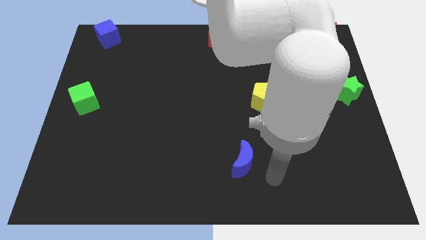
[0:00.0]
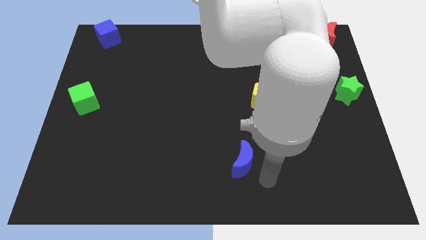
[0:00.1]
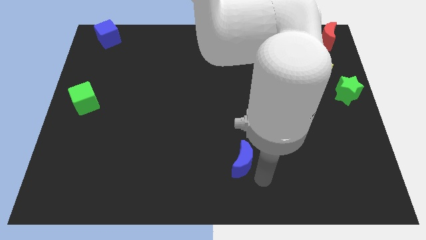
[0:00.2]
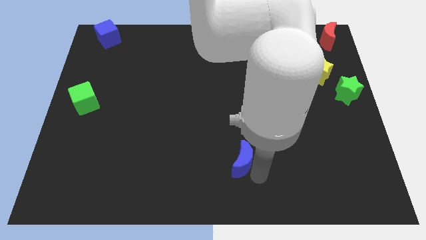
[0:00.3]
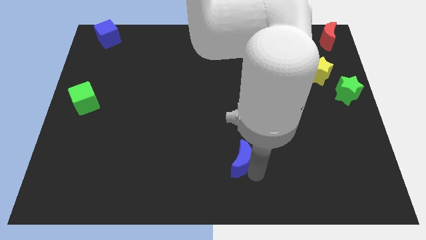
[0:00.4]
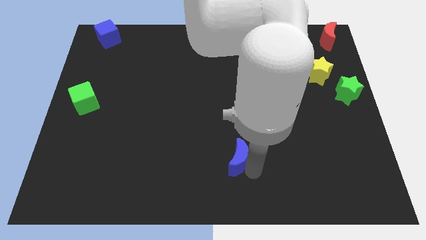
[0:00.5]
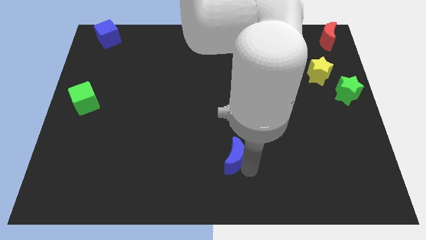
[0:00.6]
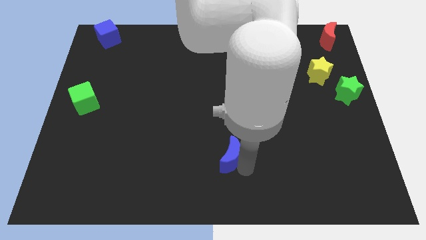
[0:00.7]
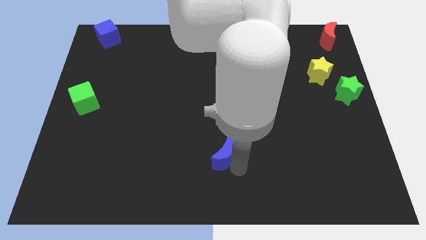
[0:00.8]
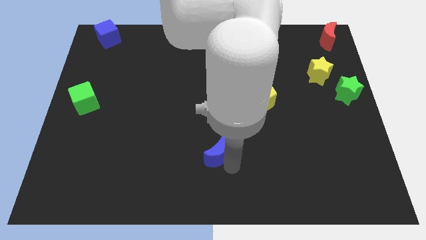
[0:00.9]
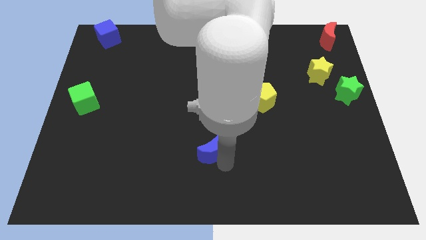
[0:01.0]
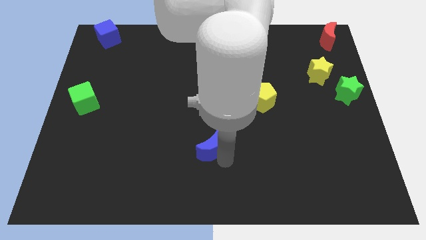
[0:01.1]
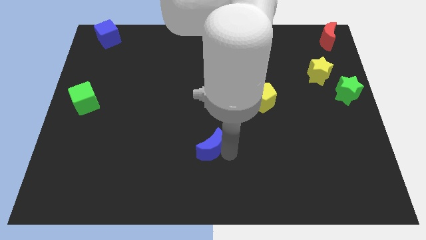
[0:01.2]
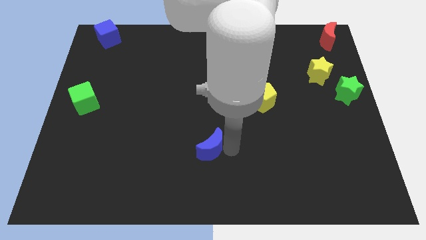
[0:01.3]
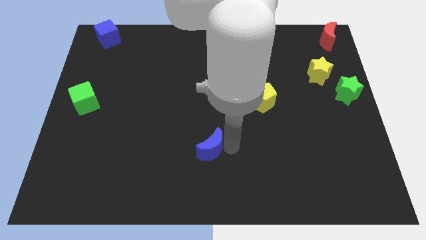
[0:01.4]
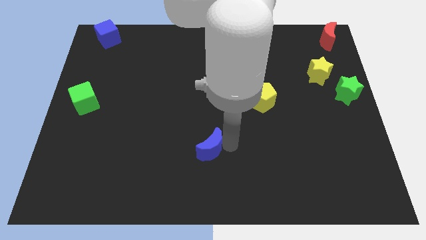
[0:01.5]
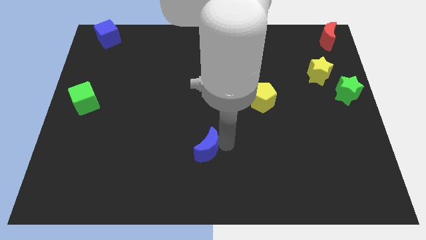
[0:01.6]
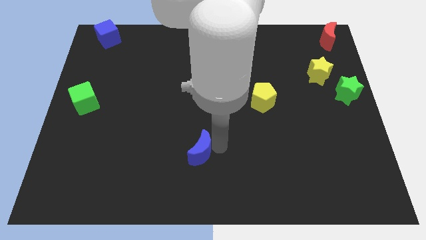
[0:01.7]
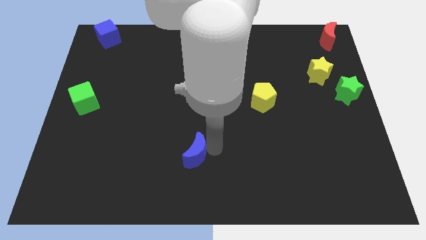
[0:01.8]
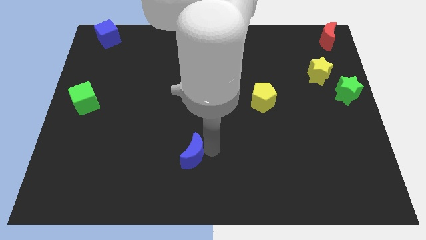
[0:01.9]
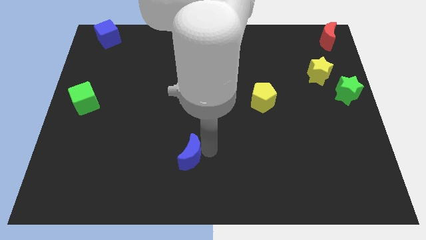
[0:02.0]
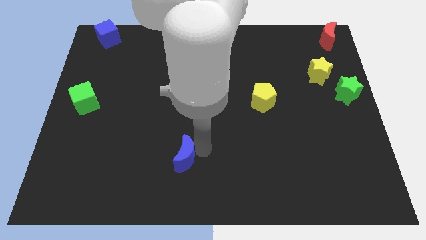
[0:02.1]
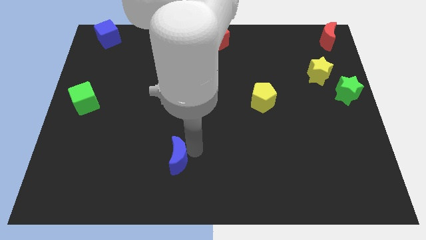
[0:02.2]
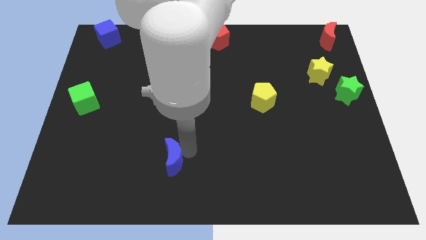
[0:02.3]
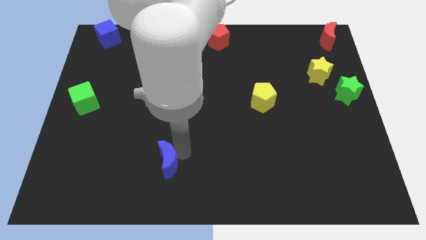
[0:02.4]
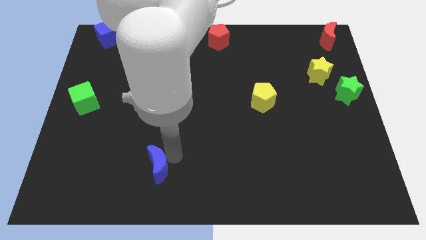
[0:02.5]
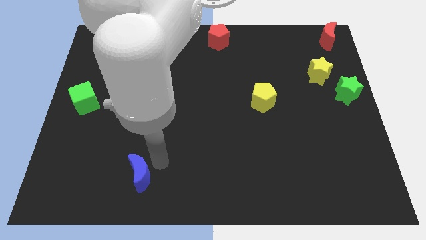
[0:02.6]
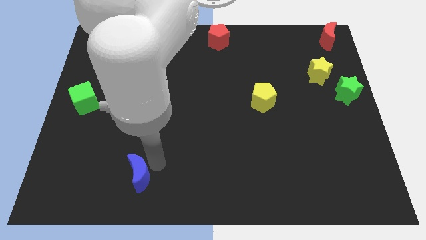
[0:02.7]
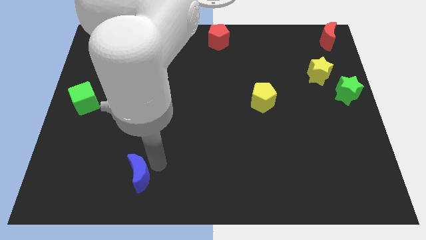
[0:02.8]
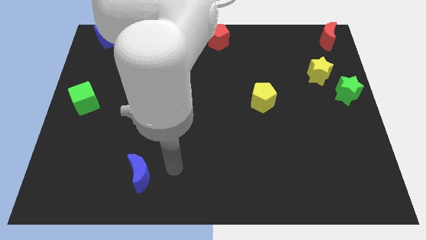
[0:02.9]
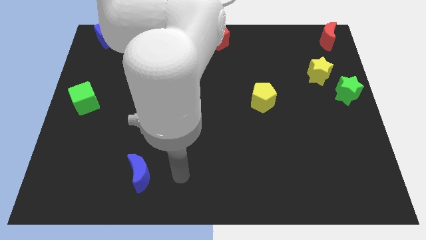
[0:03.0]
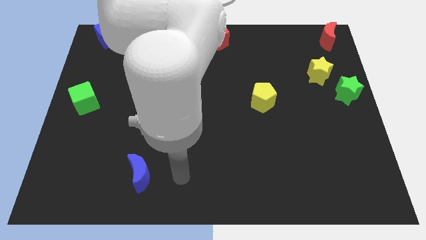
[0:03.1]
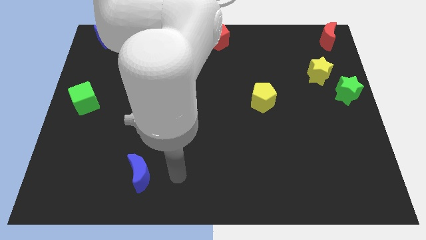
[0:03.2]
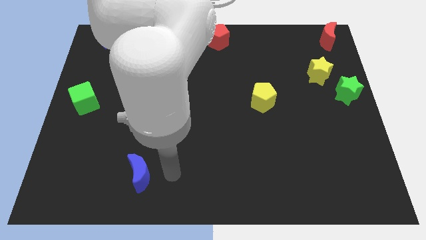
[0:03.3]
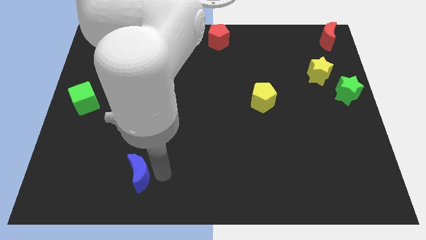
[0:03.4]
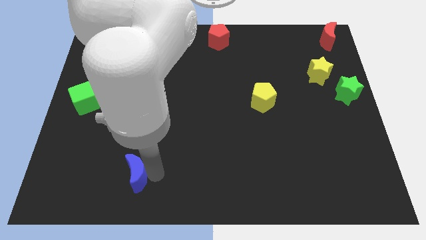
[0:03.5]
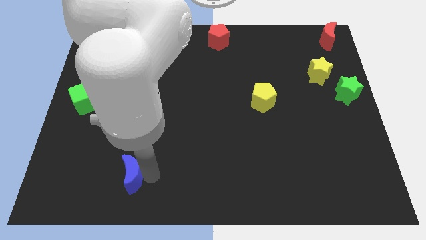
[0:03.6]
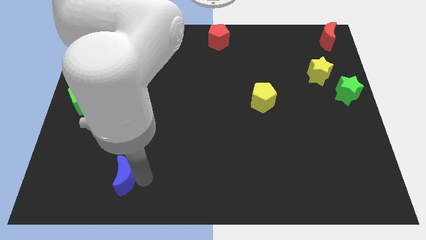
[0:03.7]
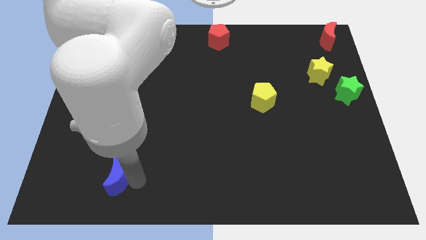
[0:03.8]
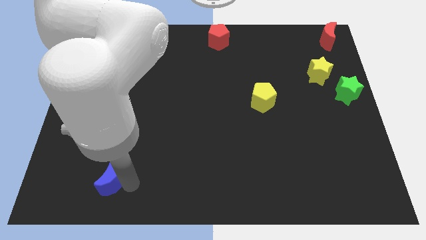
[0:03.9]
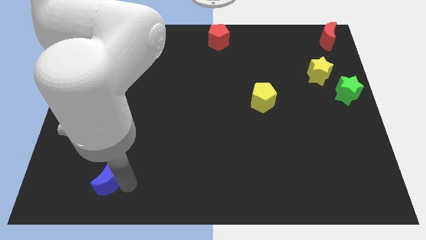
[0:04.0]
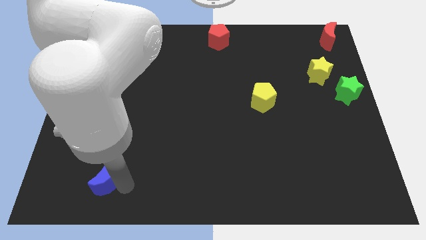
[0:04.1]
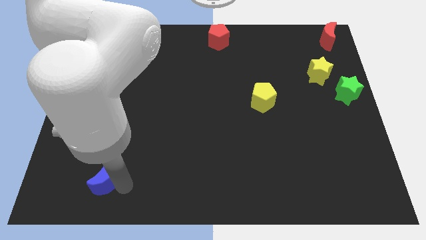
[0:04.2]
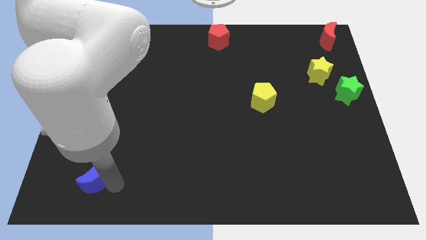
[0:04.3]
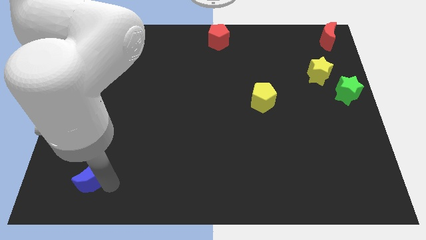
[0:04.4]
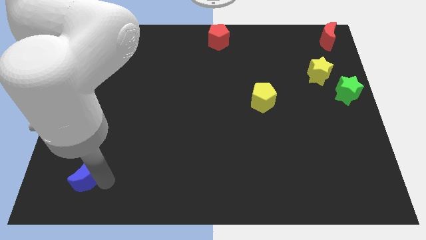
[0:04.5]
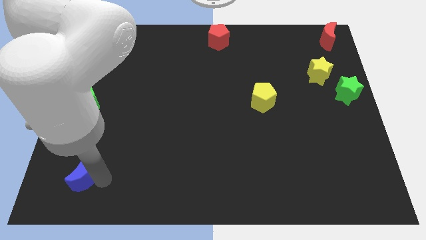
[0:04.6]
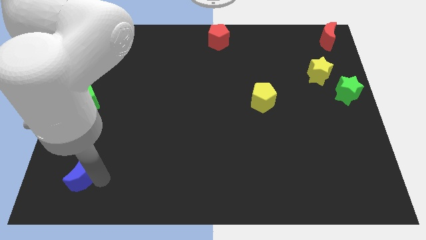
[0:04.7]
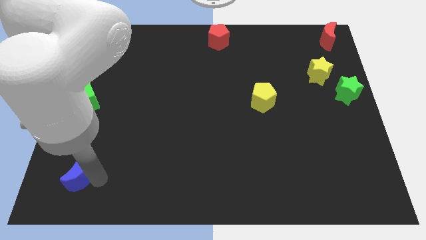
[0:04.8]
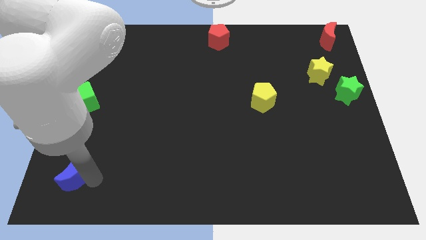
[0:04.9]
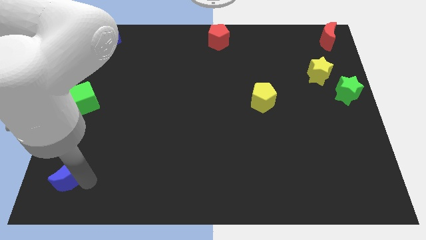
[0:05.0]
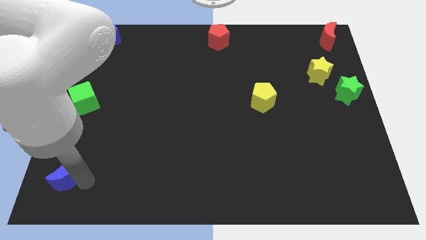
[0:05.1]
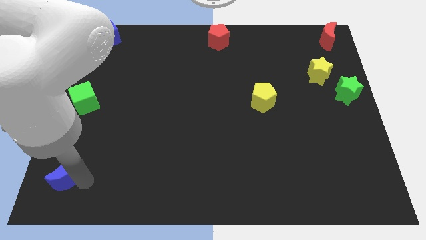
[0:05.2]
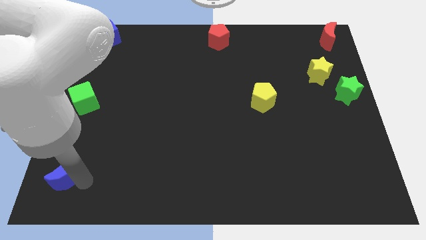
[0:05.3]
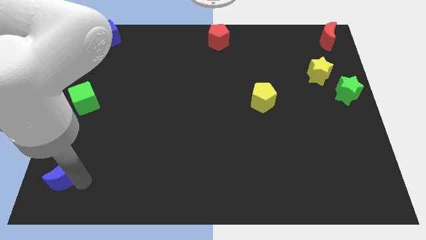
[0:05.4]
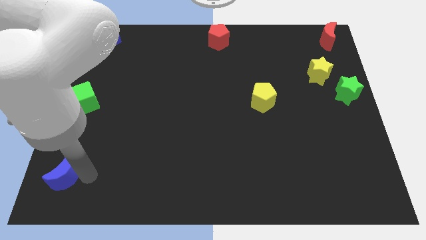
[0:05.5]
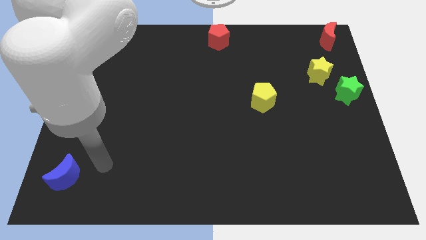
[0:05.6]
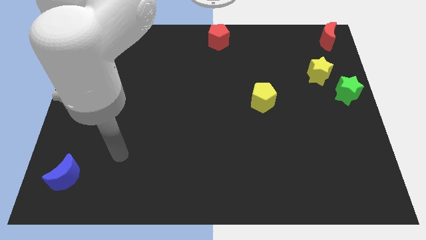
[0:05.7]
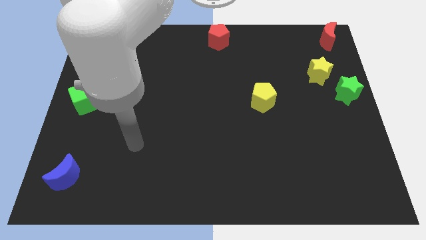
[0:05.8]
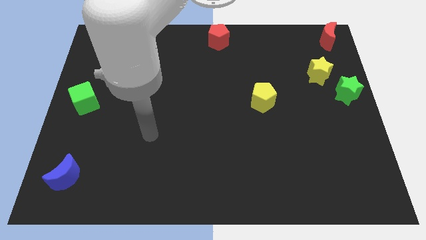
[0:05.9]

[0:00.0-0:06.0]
push the blue moon to the vertical bottom side of the green cube

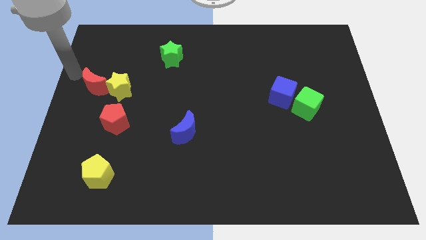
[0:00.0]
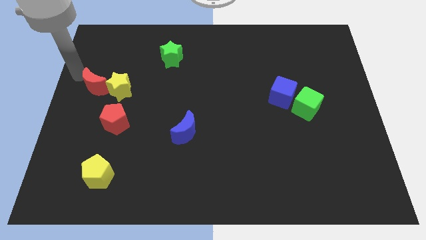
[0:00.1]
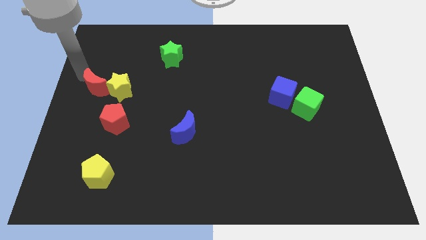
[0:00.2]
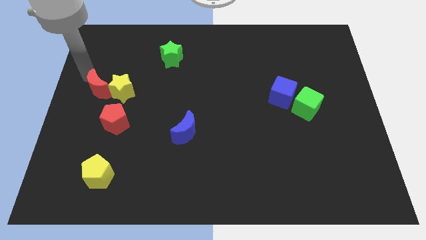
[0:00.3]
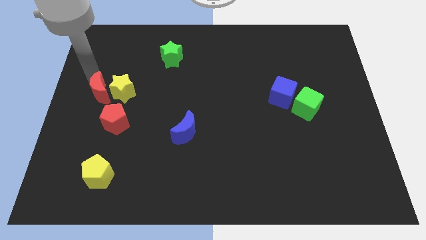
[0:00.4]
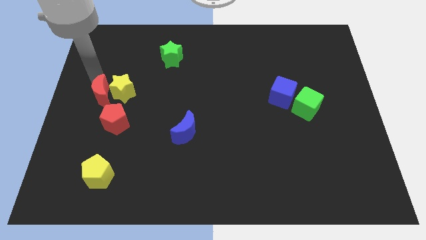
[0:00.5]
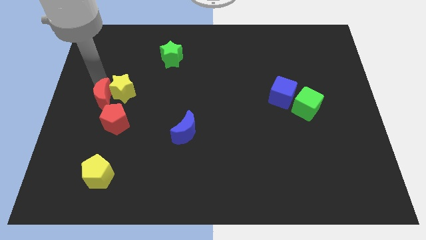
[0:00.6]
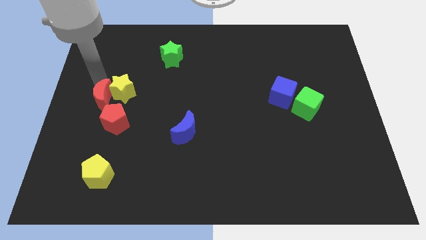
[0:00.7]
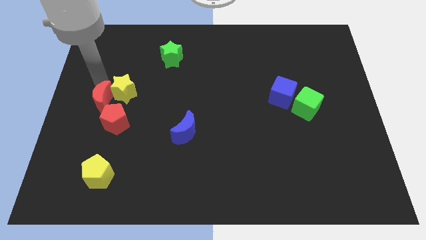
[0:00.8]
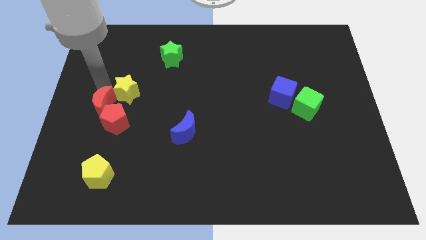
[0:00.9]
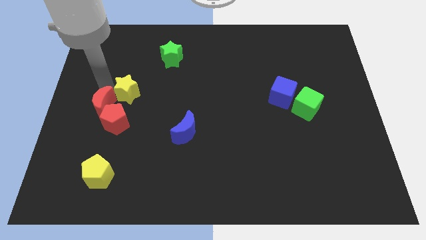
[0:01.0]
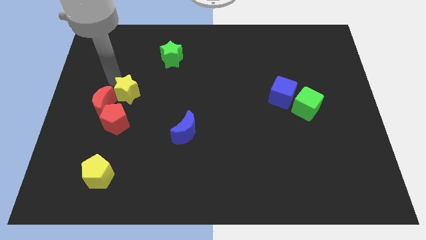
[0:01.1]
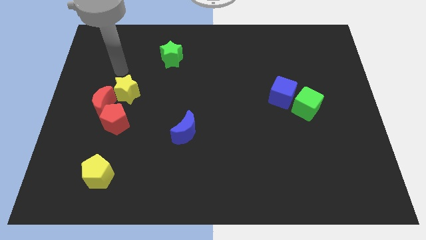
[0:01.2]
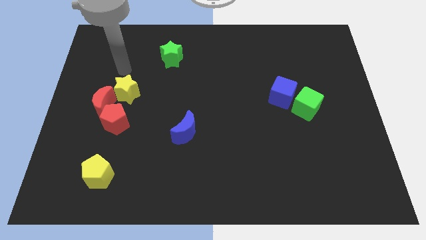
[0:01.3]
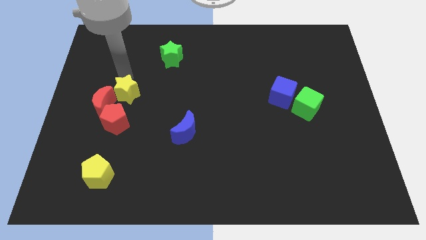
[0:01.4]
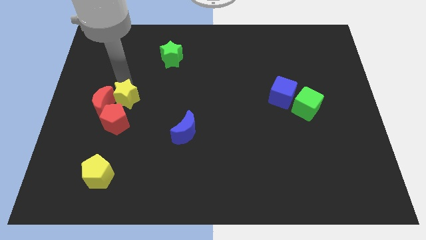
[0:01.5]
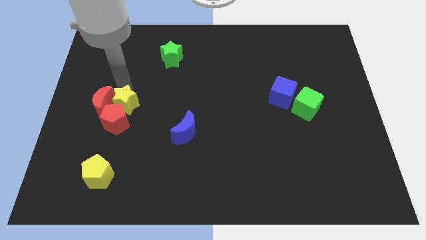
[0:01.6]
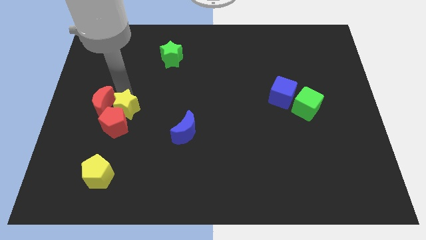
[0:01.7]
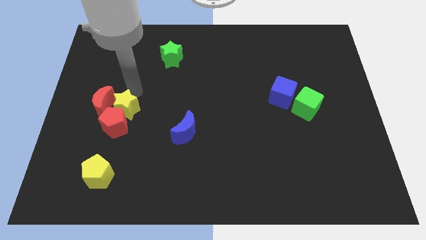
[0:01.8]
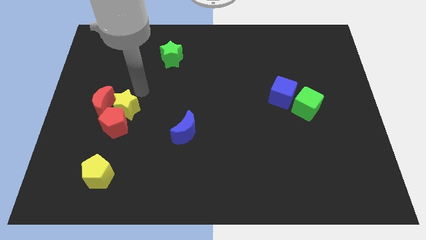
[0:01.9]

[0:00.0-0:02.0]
push the red moon and yellow star into red pentagon

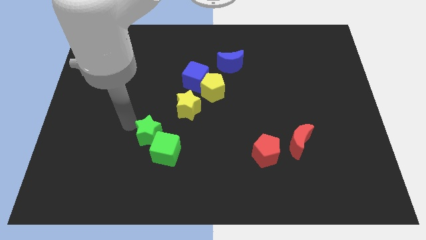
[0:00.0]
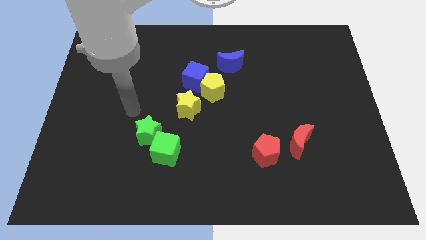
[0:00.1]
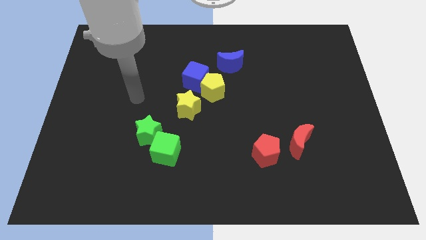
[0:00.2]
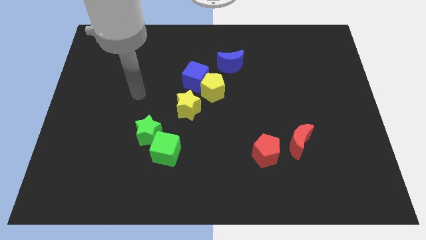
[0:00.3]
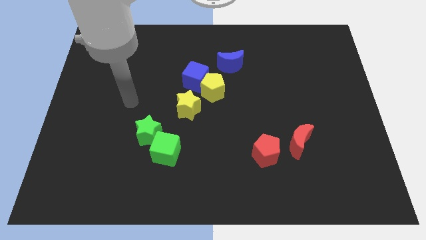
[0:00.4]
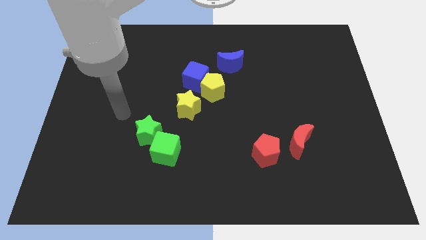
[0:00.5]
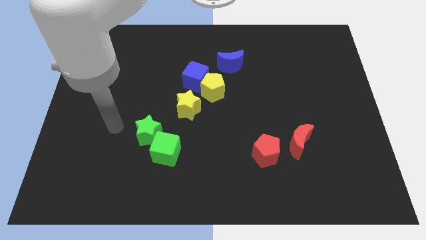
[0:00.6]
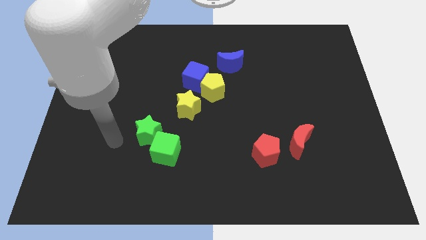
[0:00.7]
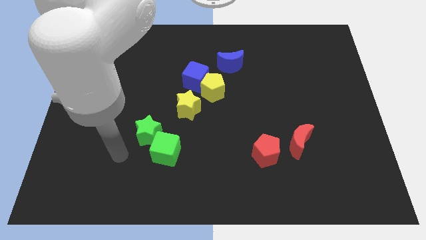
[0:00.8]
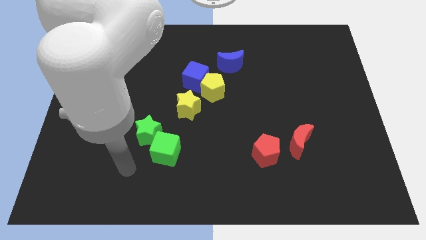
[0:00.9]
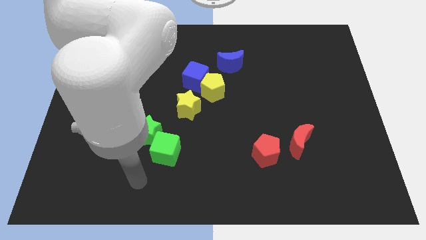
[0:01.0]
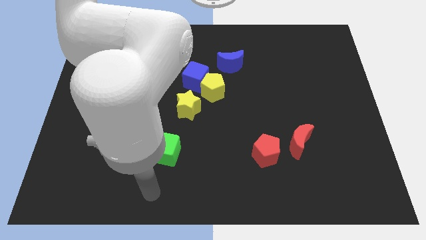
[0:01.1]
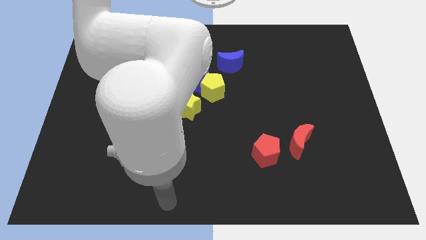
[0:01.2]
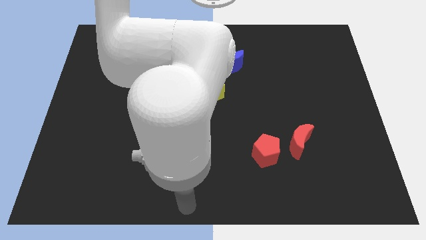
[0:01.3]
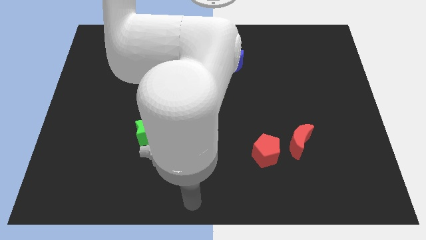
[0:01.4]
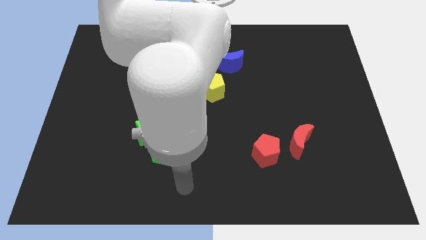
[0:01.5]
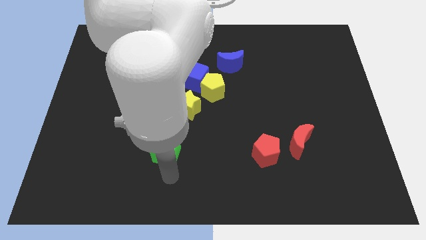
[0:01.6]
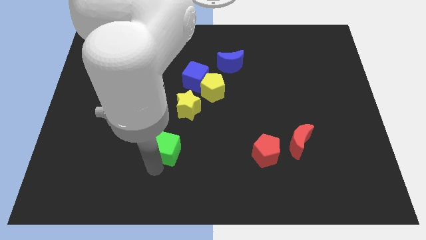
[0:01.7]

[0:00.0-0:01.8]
point your arm below green cube
